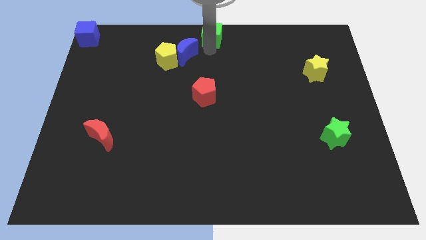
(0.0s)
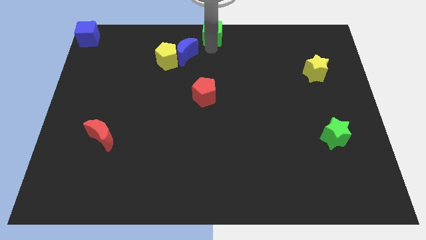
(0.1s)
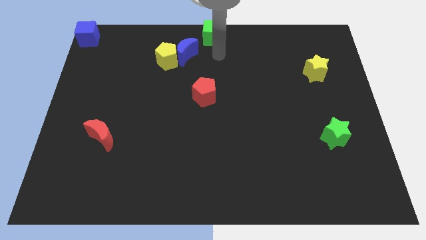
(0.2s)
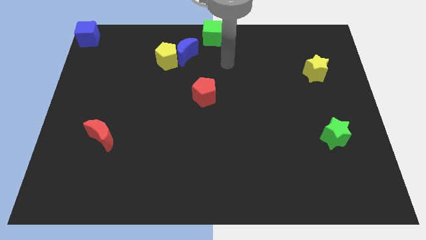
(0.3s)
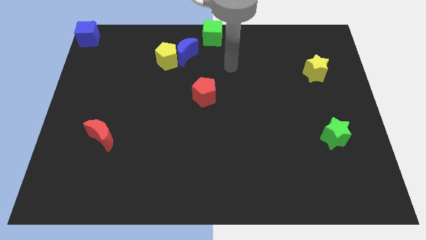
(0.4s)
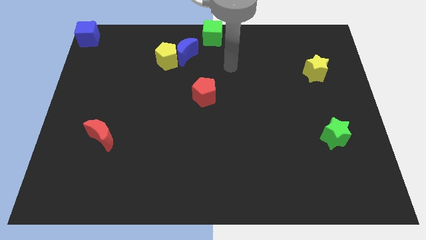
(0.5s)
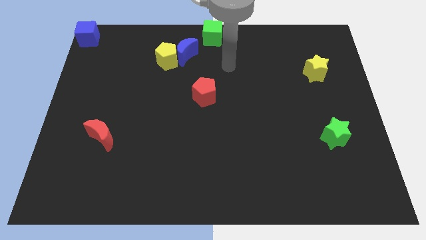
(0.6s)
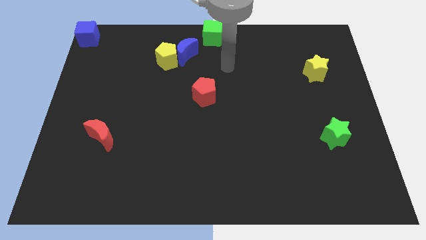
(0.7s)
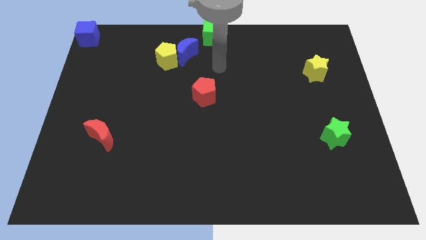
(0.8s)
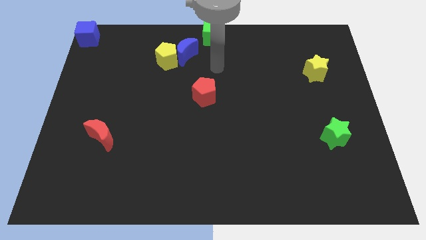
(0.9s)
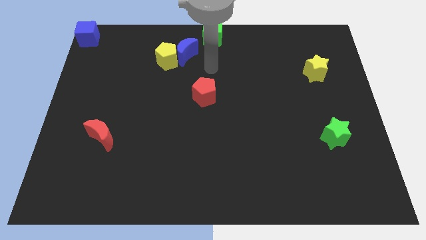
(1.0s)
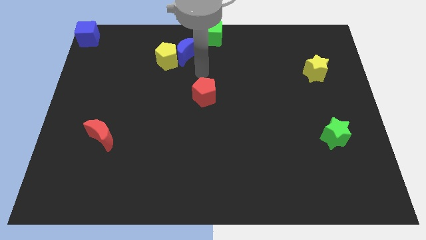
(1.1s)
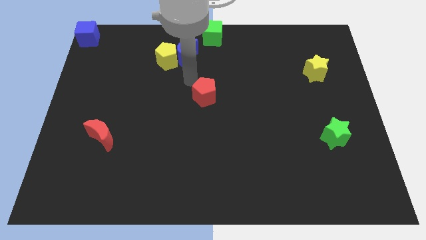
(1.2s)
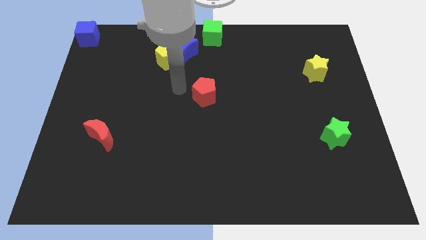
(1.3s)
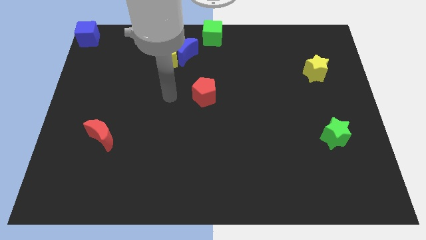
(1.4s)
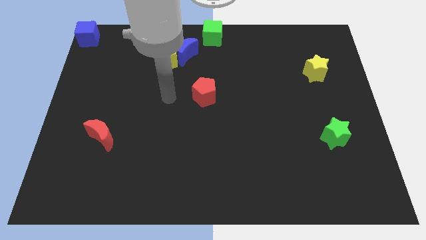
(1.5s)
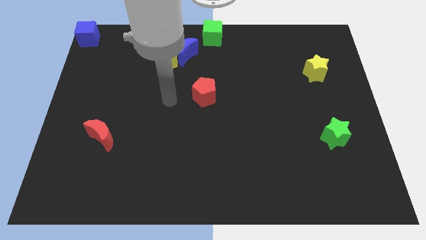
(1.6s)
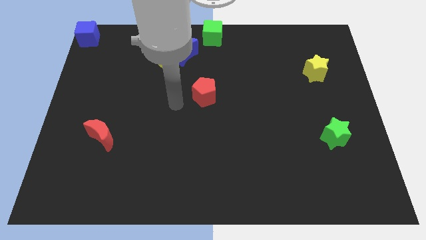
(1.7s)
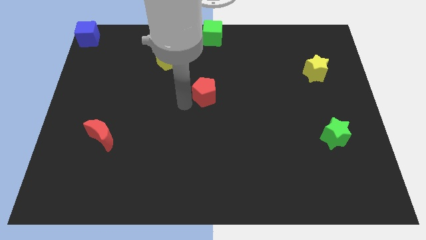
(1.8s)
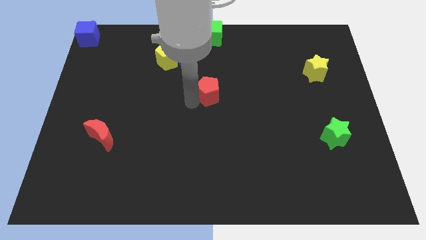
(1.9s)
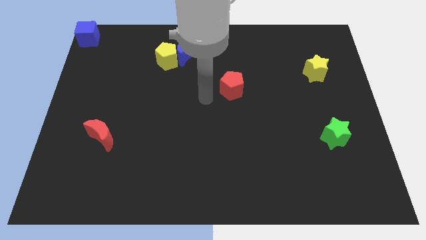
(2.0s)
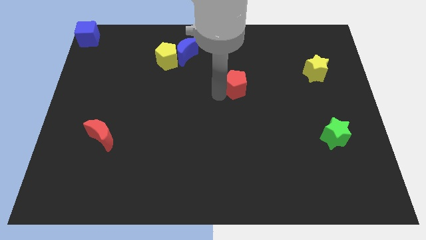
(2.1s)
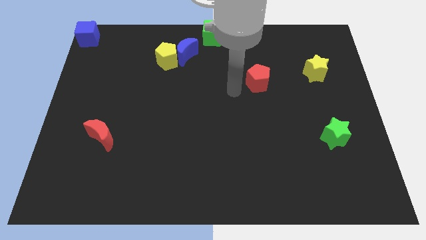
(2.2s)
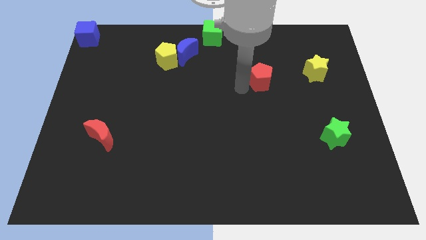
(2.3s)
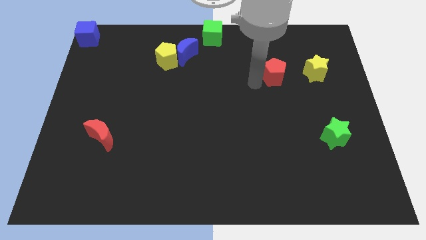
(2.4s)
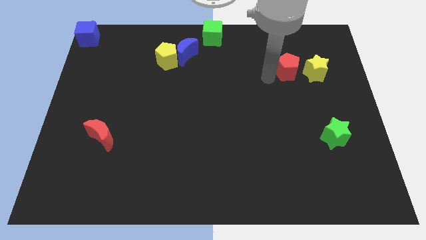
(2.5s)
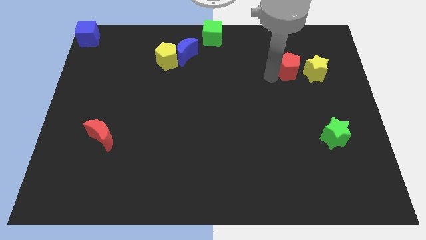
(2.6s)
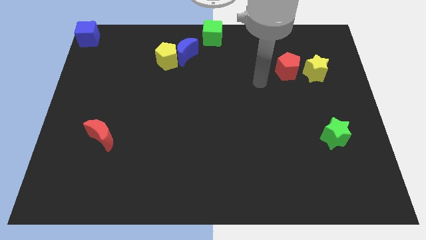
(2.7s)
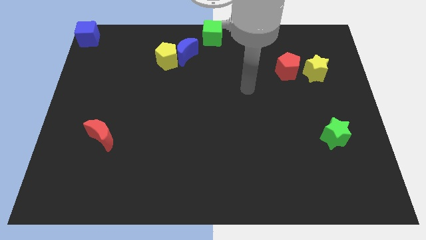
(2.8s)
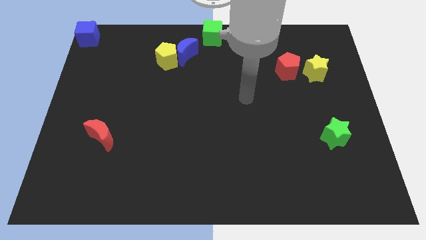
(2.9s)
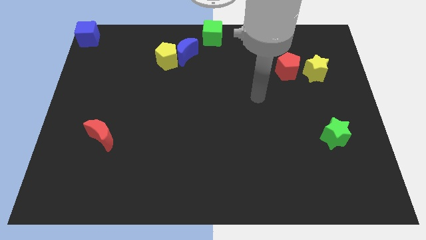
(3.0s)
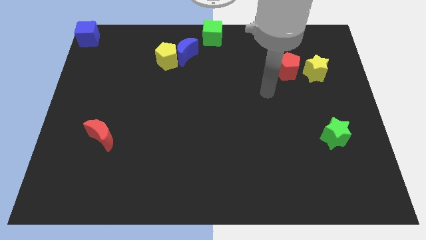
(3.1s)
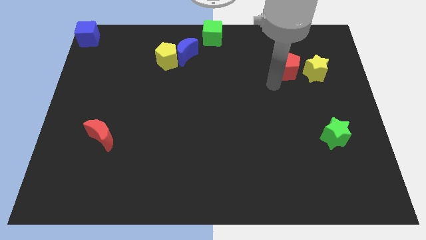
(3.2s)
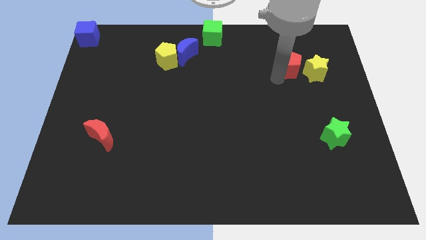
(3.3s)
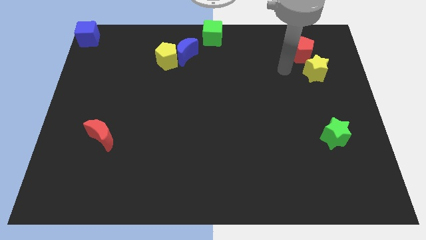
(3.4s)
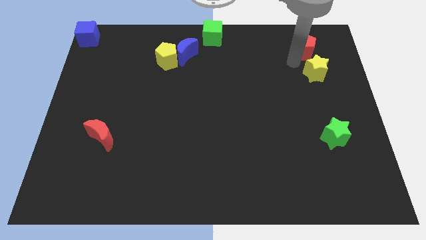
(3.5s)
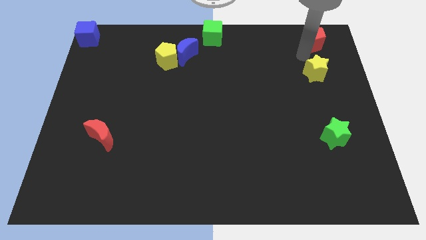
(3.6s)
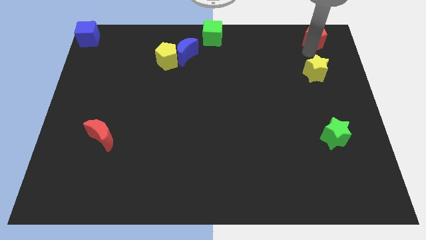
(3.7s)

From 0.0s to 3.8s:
place the red pentagon above yellow star

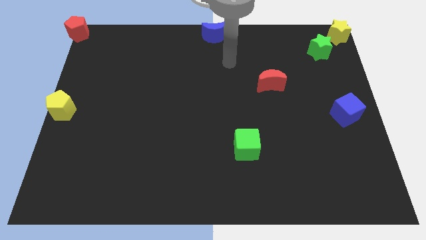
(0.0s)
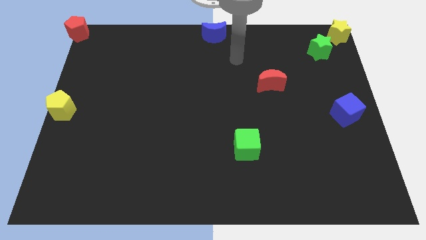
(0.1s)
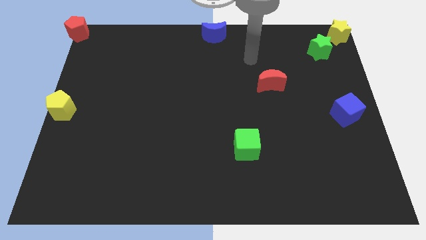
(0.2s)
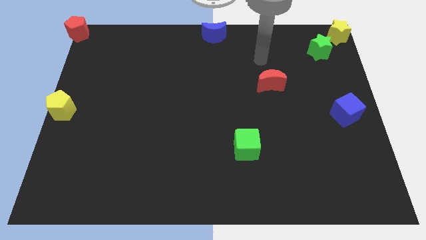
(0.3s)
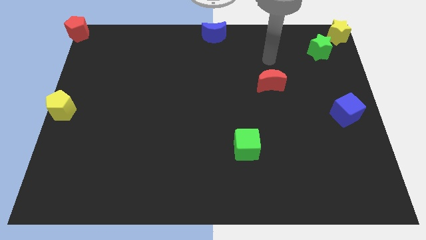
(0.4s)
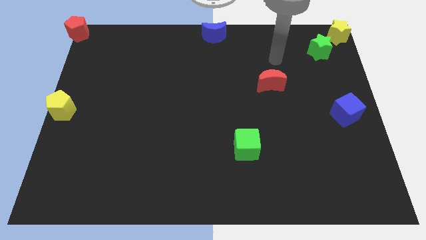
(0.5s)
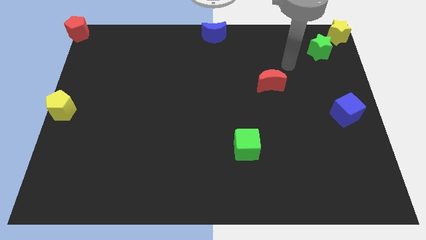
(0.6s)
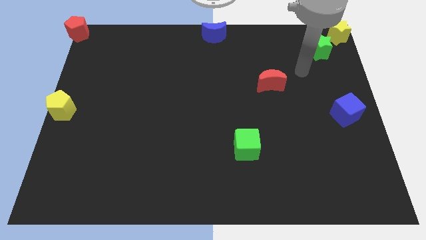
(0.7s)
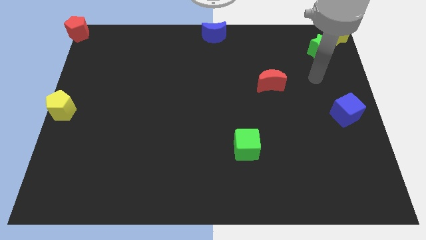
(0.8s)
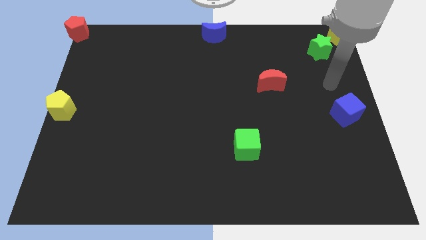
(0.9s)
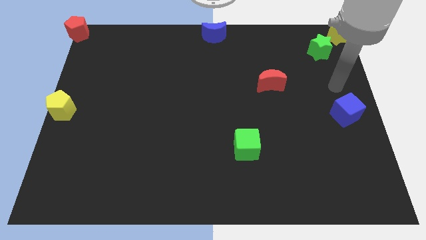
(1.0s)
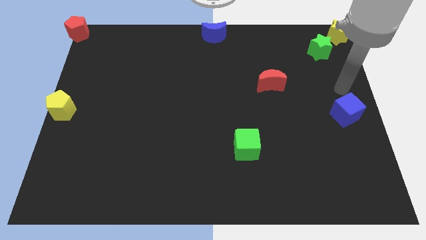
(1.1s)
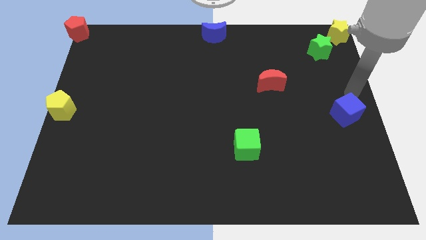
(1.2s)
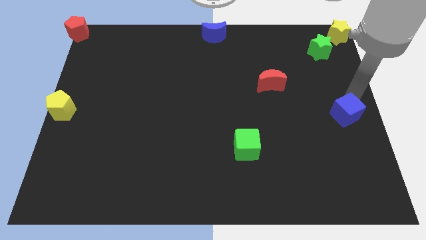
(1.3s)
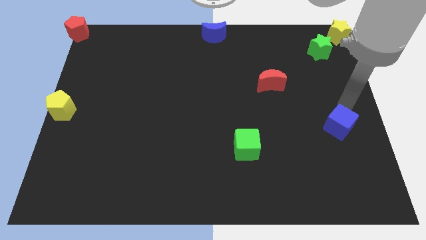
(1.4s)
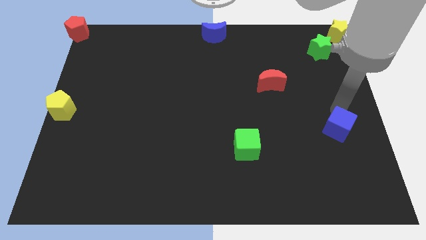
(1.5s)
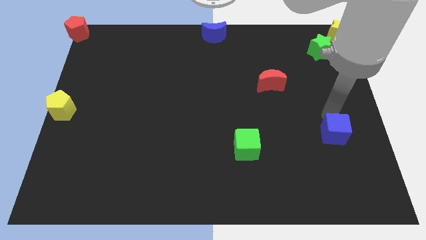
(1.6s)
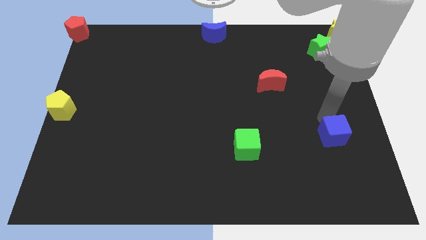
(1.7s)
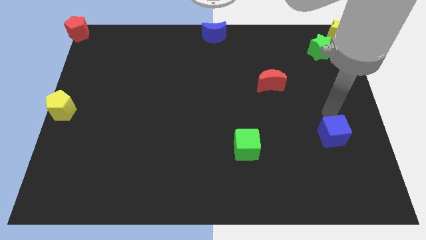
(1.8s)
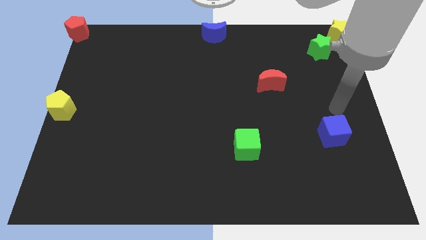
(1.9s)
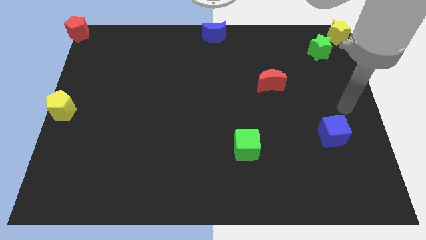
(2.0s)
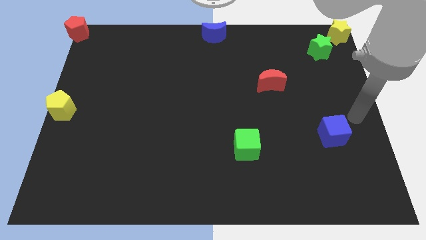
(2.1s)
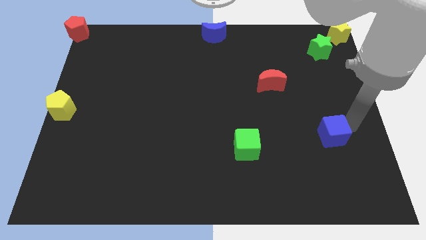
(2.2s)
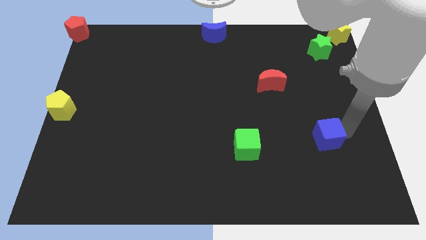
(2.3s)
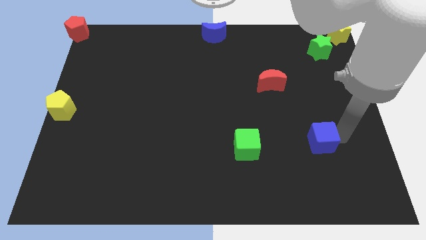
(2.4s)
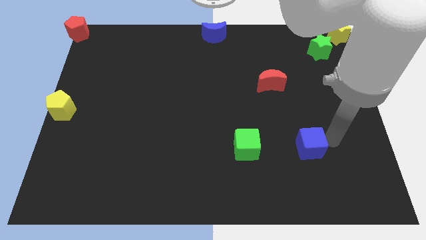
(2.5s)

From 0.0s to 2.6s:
push blue cube downwards of the board

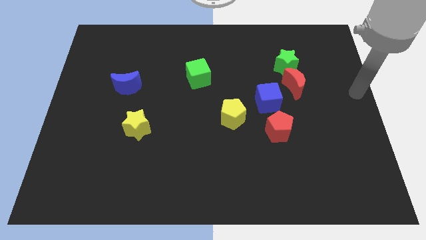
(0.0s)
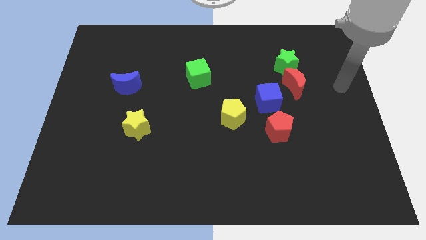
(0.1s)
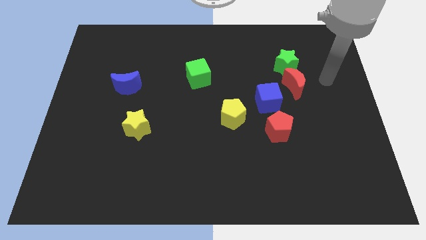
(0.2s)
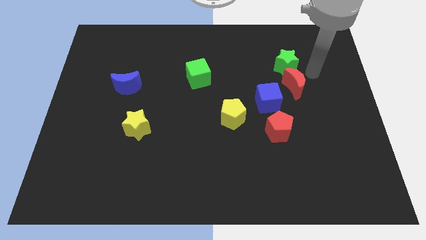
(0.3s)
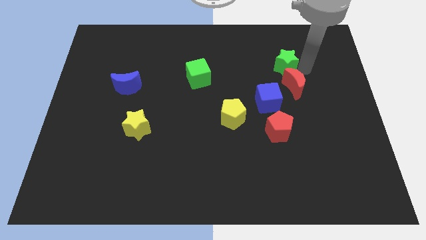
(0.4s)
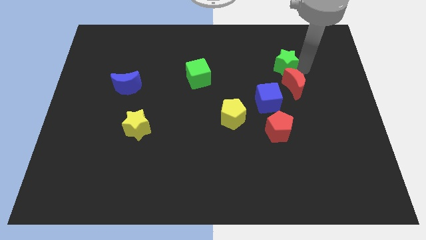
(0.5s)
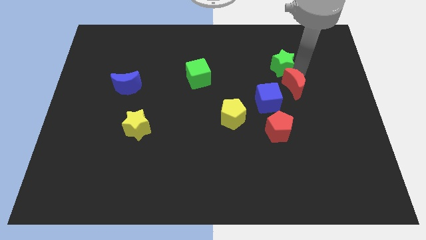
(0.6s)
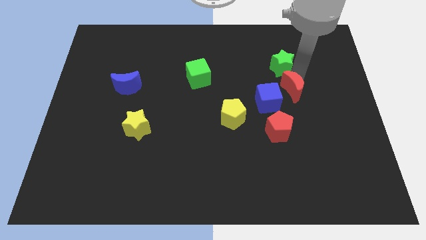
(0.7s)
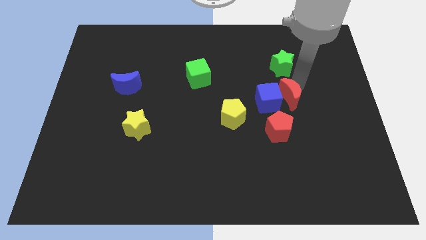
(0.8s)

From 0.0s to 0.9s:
separete the green star and red crescent

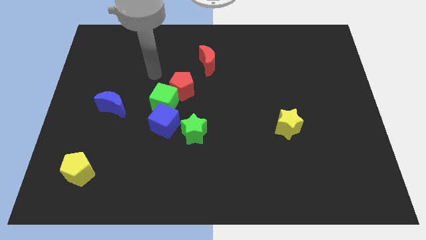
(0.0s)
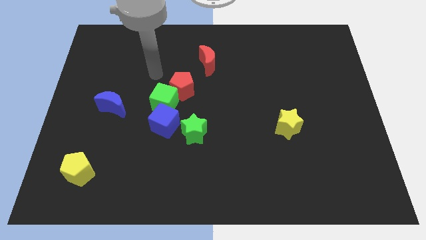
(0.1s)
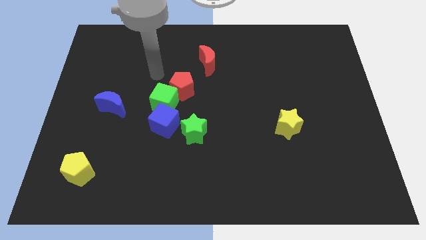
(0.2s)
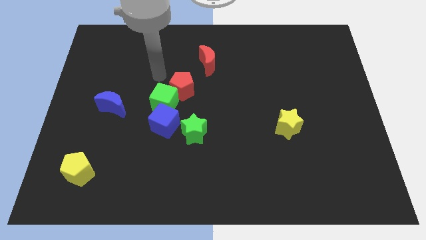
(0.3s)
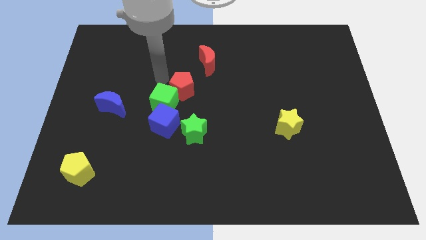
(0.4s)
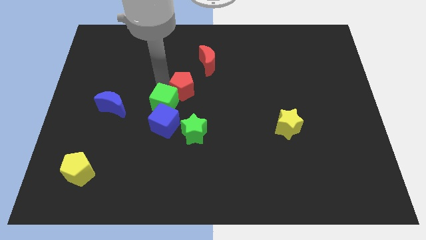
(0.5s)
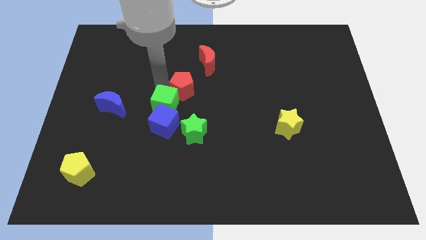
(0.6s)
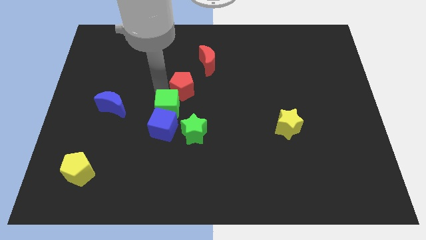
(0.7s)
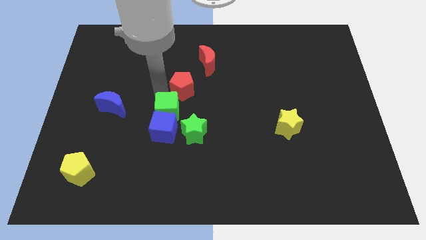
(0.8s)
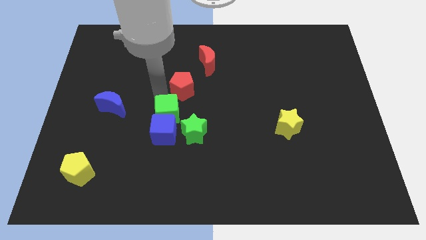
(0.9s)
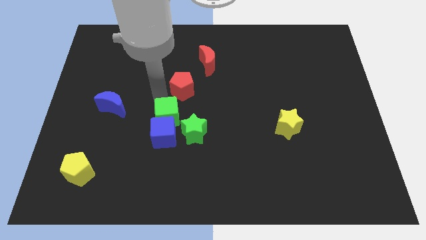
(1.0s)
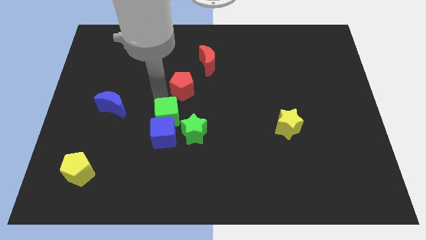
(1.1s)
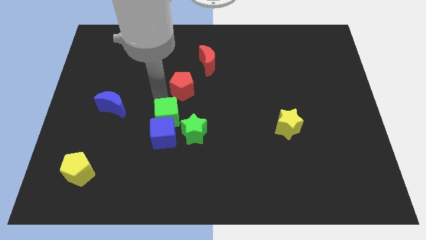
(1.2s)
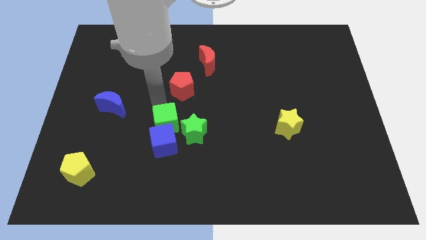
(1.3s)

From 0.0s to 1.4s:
push the green cube into the blue cube

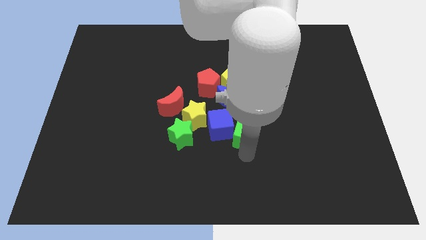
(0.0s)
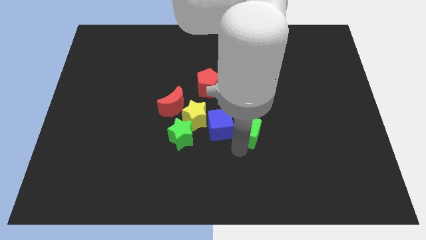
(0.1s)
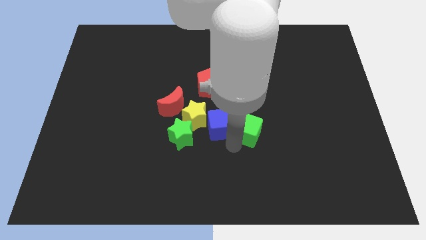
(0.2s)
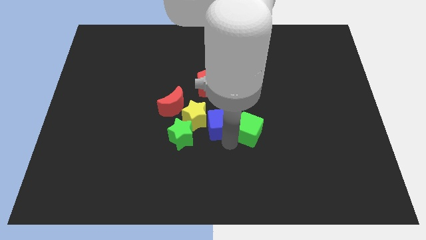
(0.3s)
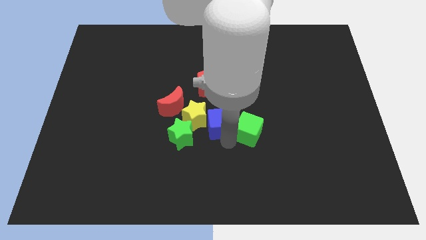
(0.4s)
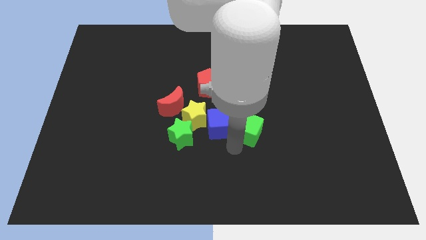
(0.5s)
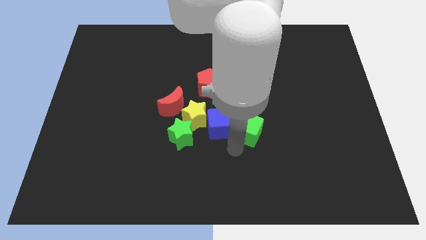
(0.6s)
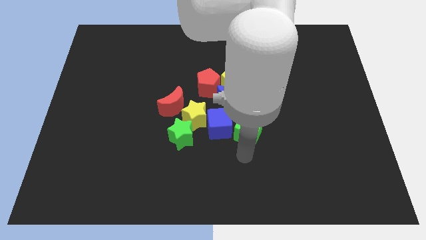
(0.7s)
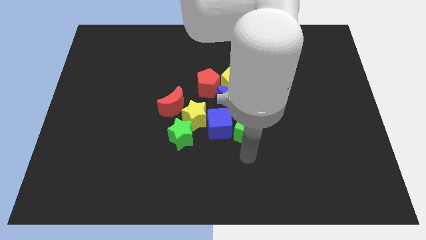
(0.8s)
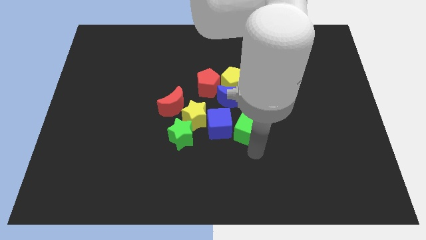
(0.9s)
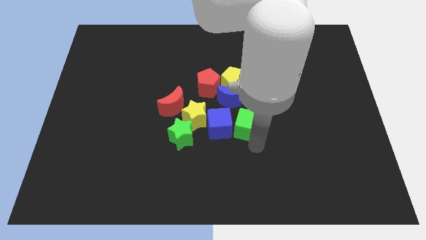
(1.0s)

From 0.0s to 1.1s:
push green cube slightly up
